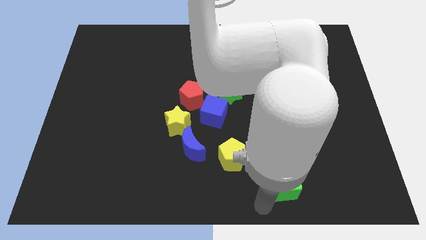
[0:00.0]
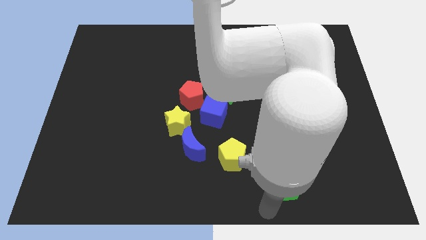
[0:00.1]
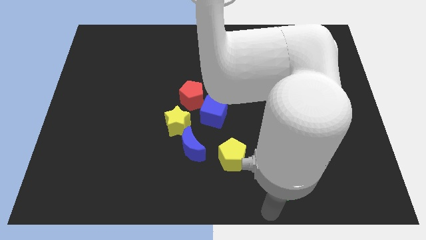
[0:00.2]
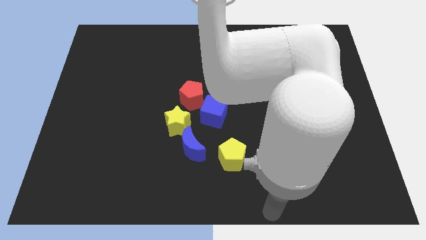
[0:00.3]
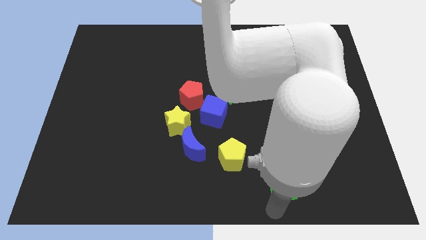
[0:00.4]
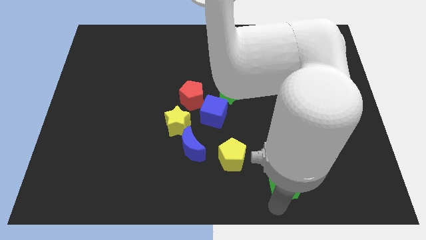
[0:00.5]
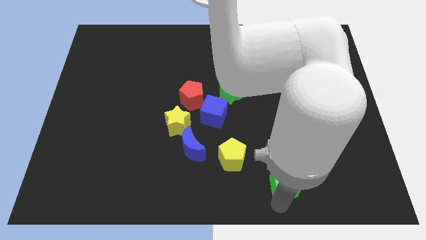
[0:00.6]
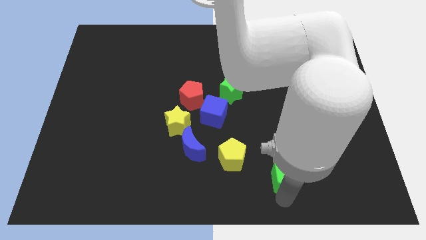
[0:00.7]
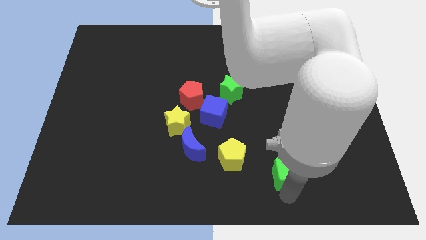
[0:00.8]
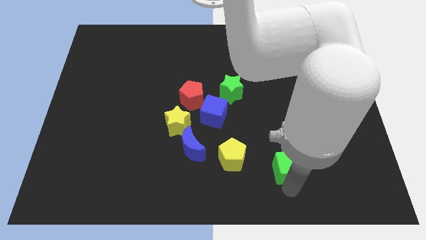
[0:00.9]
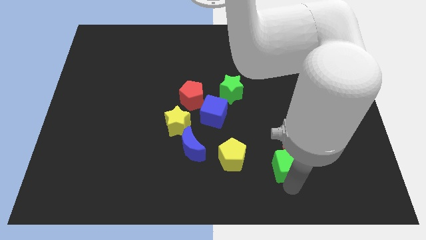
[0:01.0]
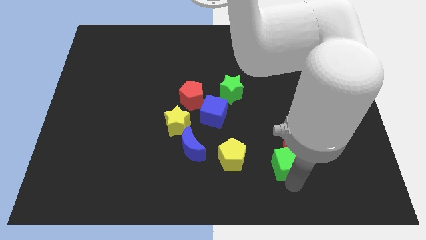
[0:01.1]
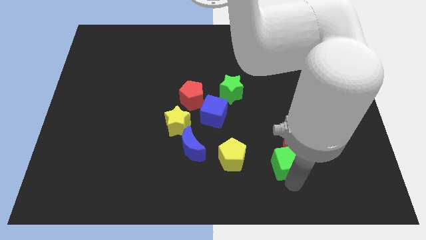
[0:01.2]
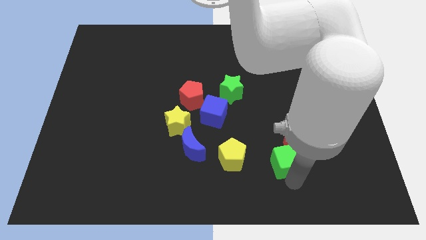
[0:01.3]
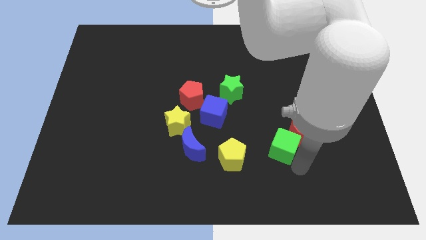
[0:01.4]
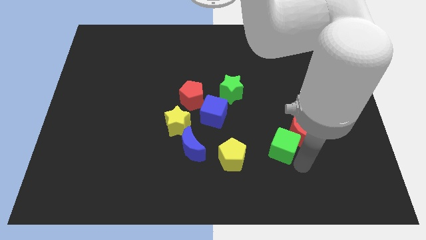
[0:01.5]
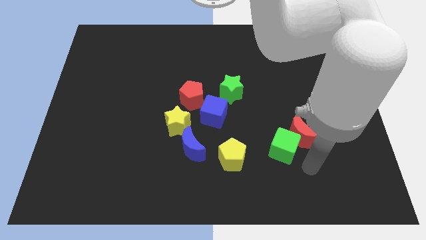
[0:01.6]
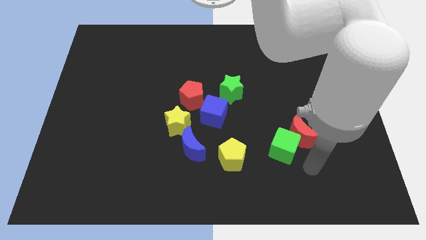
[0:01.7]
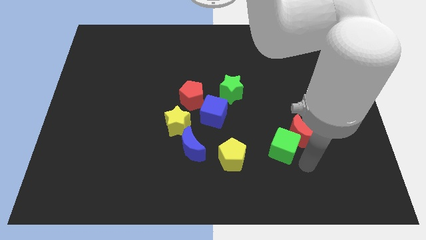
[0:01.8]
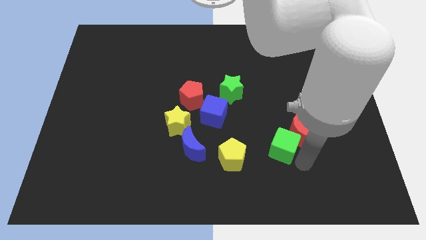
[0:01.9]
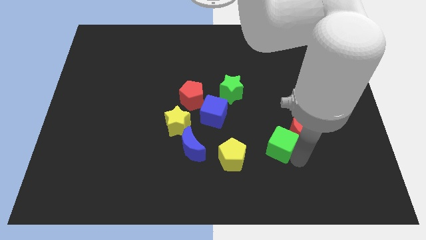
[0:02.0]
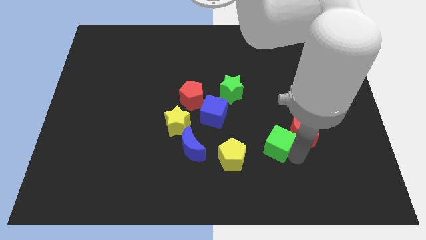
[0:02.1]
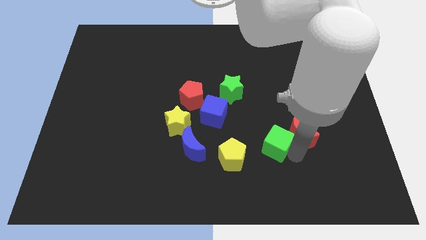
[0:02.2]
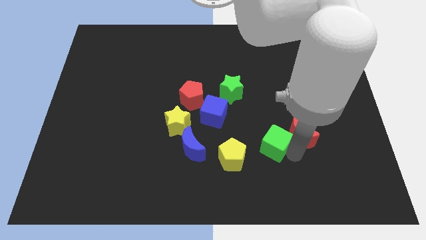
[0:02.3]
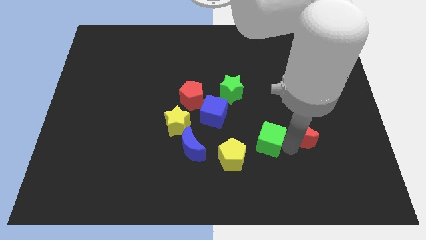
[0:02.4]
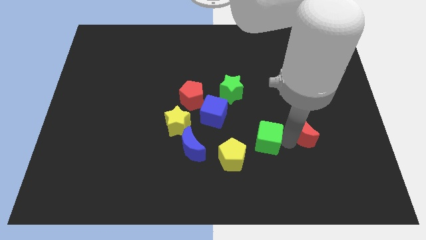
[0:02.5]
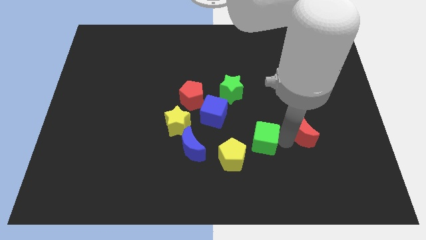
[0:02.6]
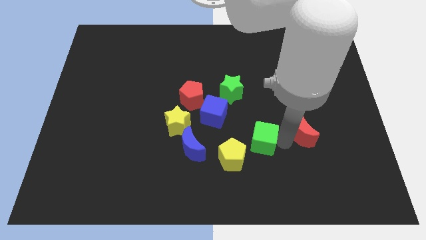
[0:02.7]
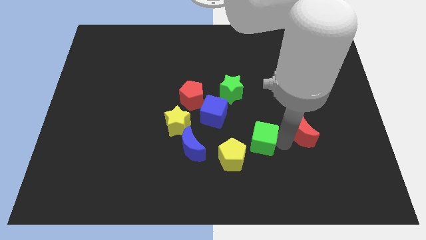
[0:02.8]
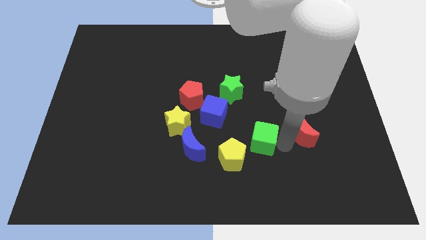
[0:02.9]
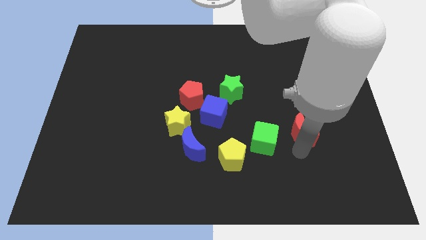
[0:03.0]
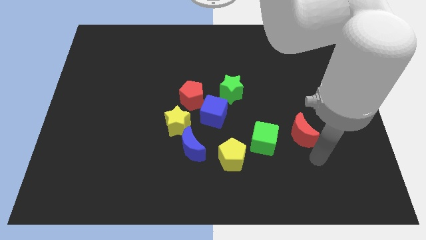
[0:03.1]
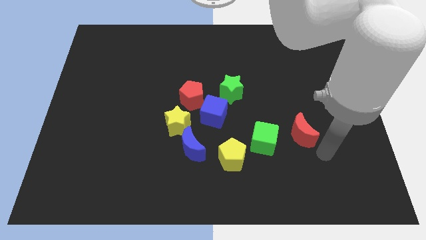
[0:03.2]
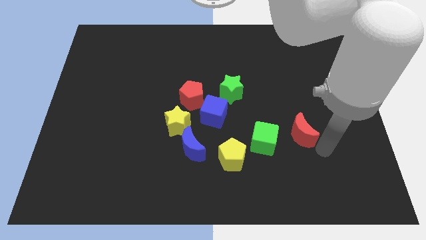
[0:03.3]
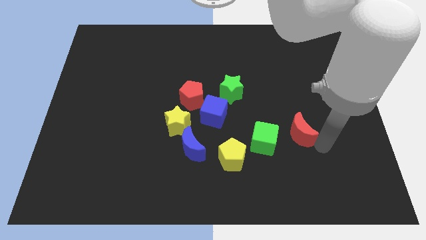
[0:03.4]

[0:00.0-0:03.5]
place the green cube in between the yellow pentagon and the red moon

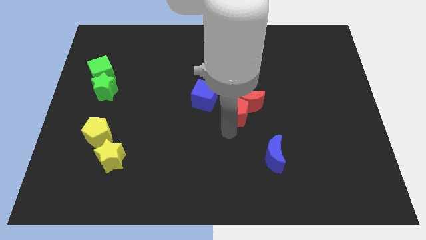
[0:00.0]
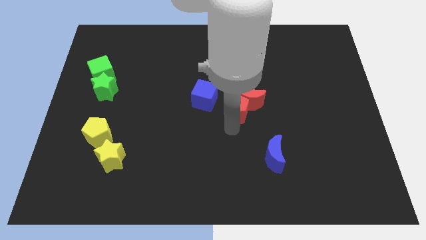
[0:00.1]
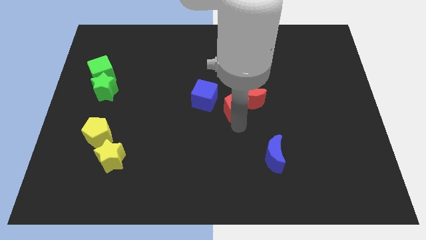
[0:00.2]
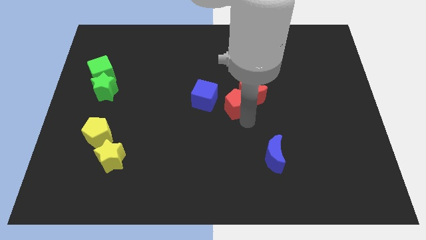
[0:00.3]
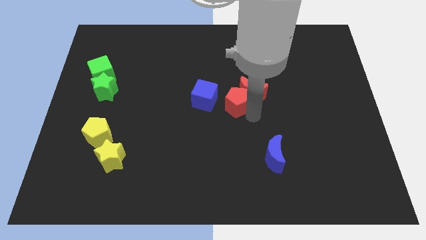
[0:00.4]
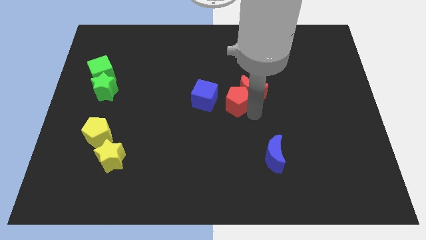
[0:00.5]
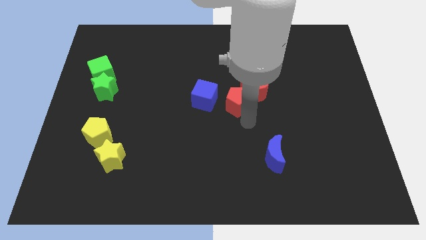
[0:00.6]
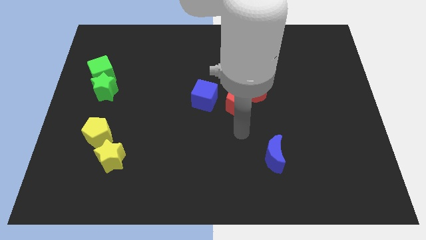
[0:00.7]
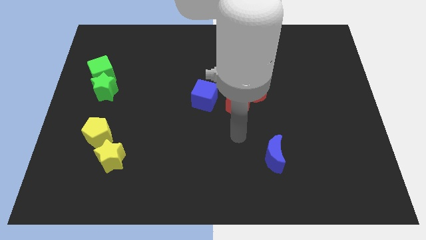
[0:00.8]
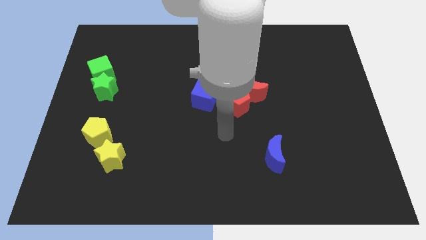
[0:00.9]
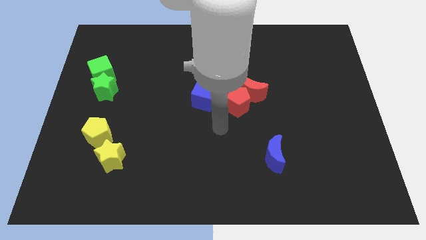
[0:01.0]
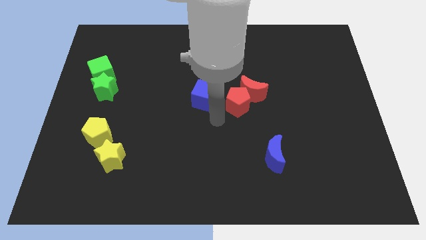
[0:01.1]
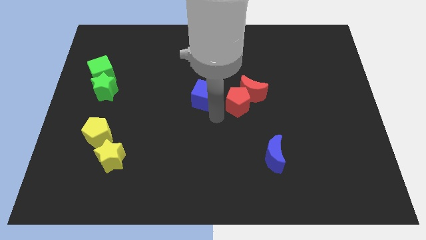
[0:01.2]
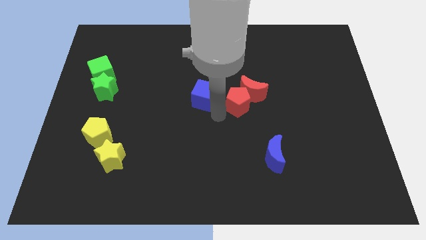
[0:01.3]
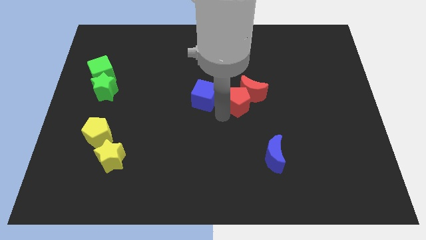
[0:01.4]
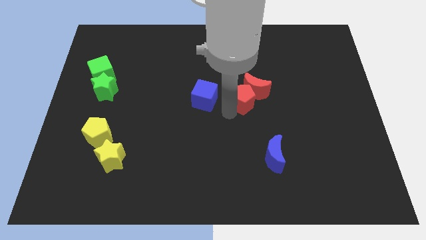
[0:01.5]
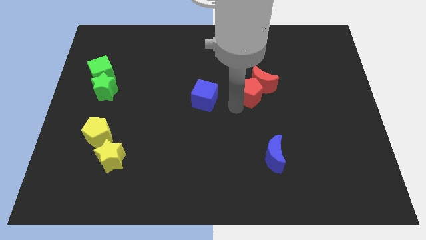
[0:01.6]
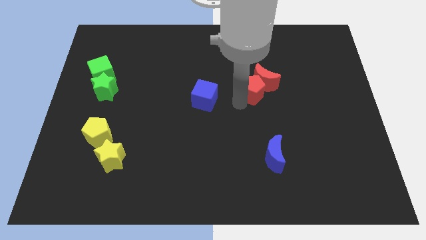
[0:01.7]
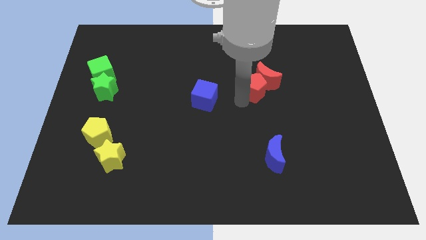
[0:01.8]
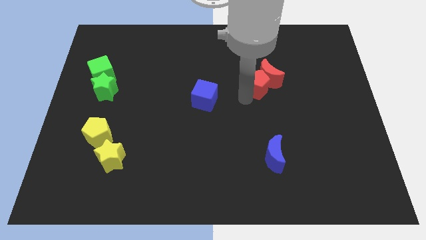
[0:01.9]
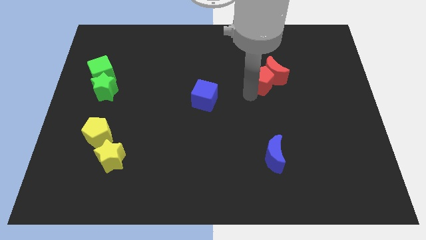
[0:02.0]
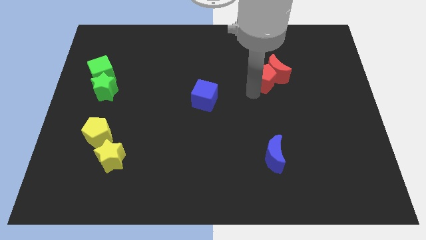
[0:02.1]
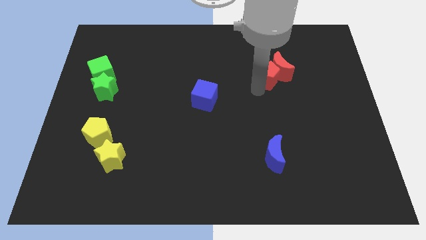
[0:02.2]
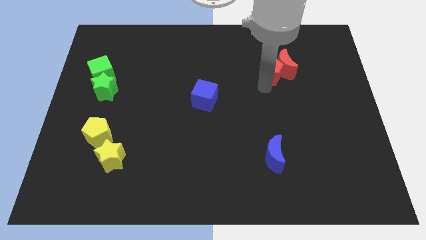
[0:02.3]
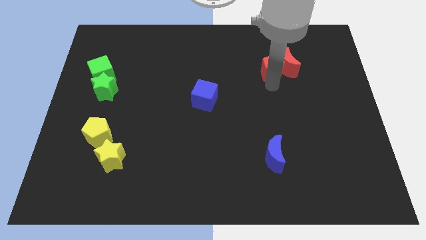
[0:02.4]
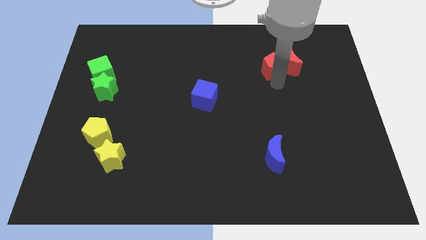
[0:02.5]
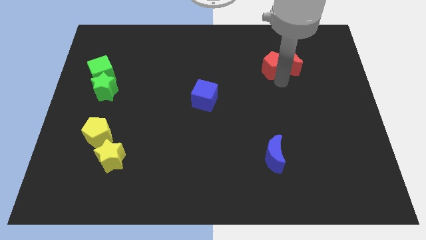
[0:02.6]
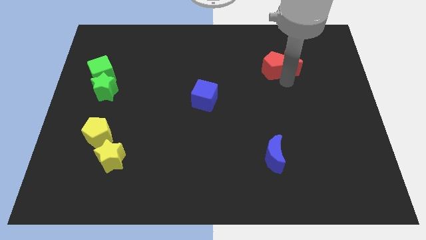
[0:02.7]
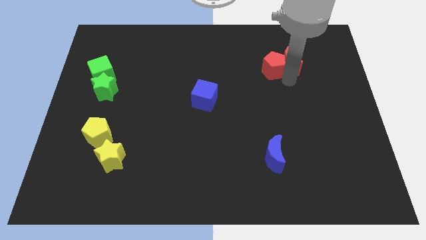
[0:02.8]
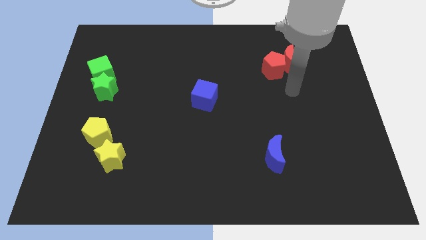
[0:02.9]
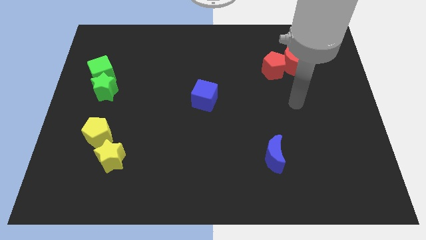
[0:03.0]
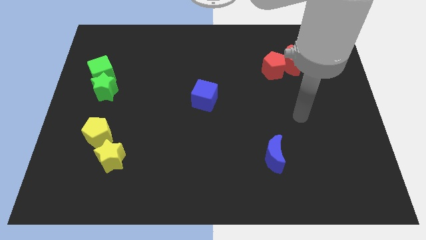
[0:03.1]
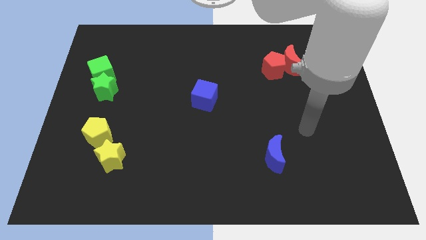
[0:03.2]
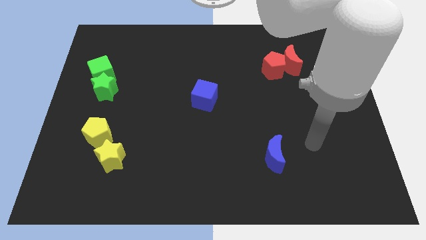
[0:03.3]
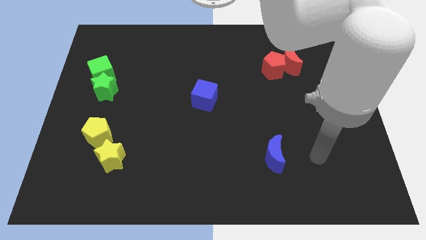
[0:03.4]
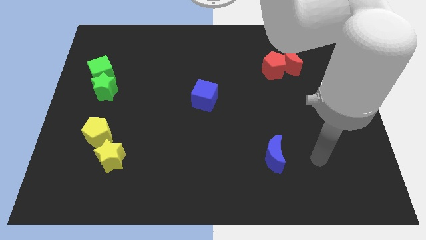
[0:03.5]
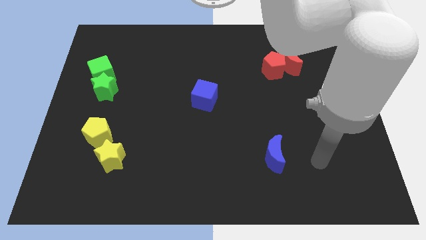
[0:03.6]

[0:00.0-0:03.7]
push the red blocks towards the top

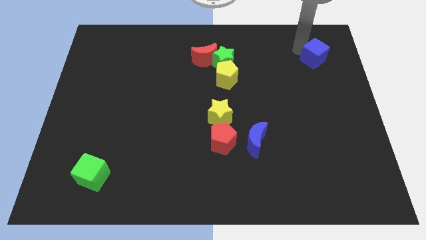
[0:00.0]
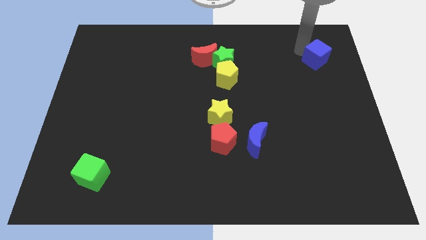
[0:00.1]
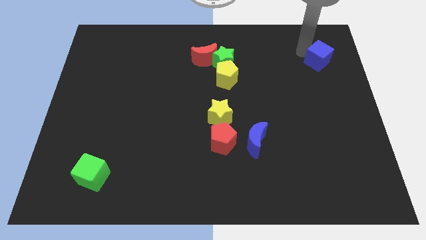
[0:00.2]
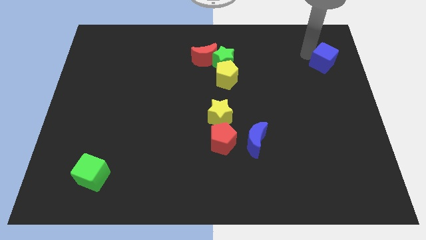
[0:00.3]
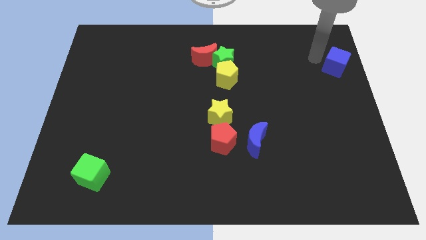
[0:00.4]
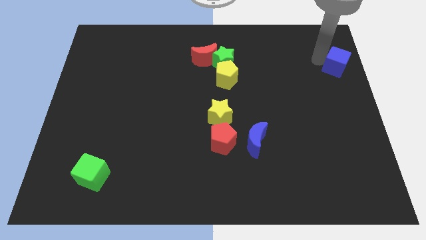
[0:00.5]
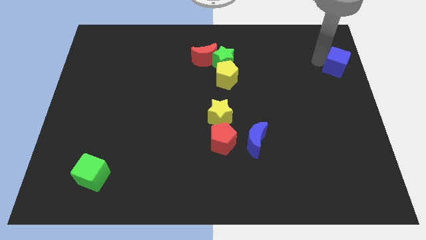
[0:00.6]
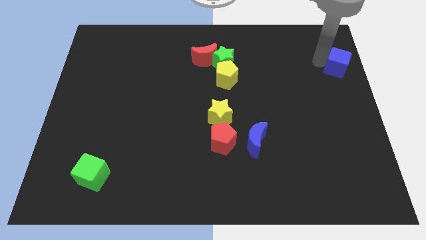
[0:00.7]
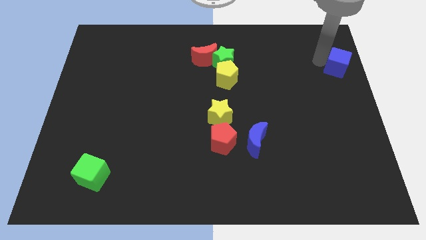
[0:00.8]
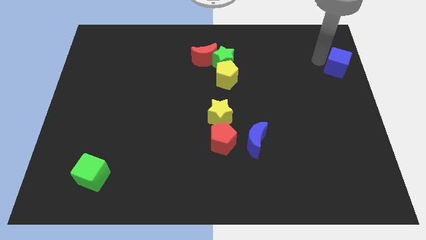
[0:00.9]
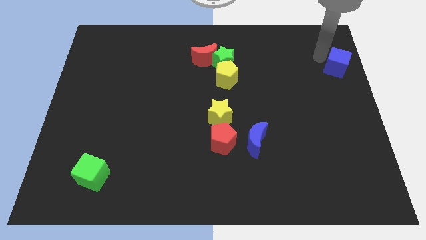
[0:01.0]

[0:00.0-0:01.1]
move the blue cube to the right side of the table

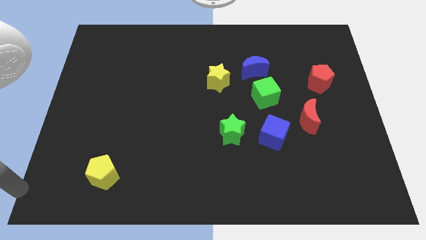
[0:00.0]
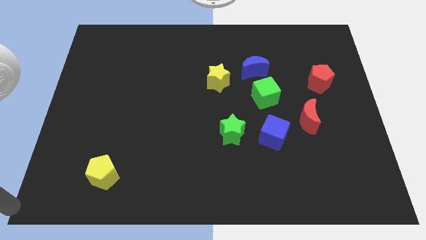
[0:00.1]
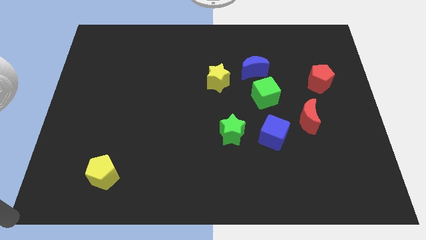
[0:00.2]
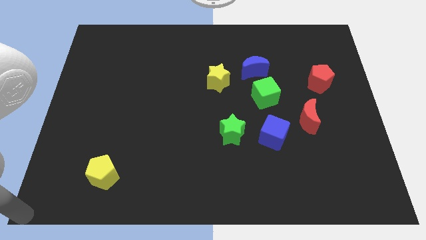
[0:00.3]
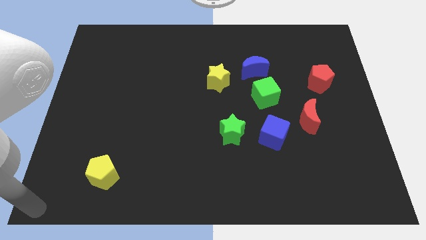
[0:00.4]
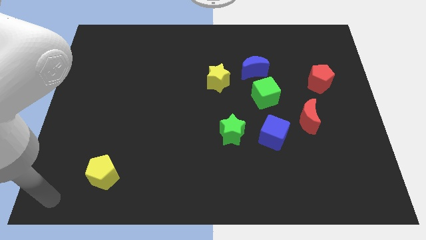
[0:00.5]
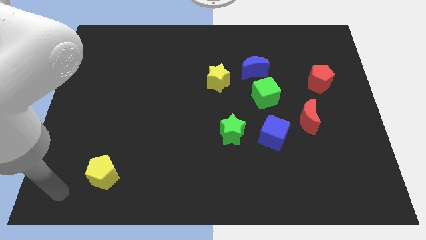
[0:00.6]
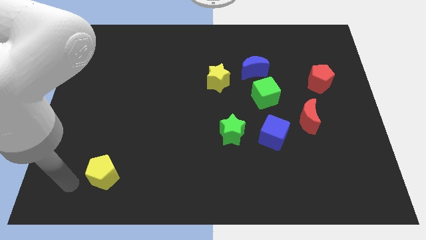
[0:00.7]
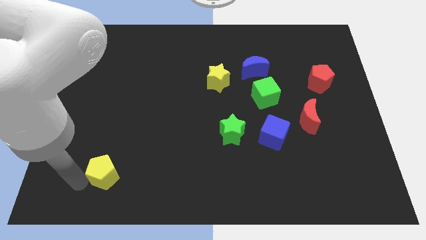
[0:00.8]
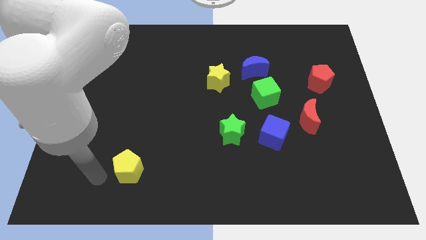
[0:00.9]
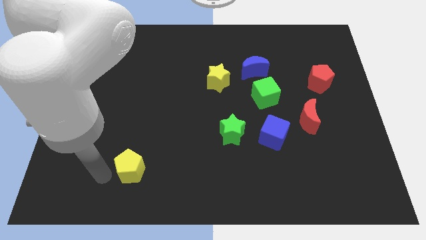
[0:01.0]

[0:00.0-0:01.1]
push the yellow pentagon slightly to the right
